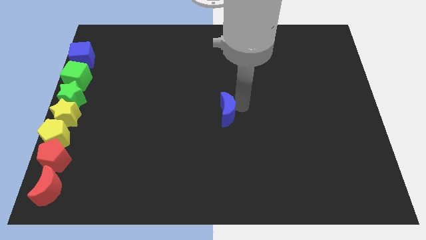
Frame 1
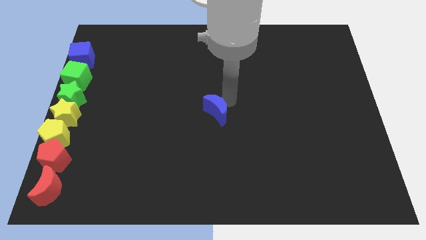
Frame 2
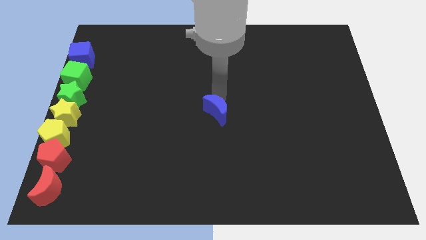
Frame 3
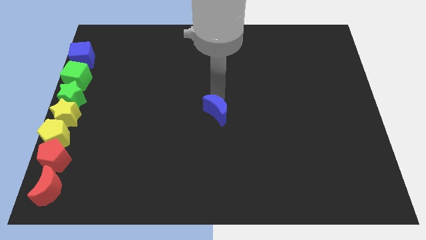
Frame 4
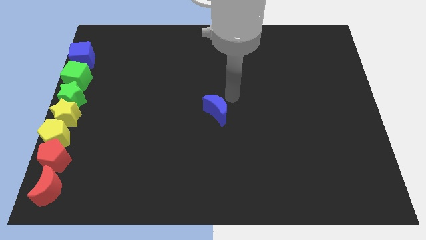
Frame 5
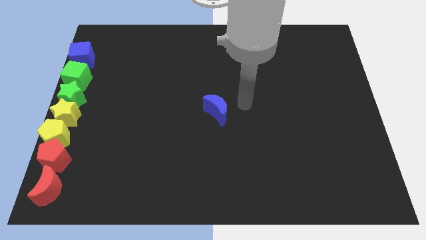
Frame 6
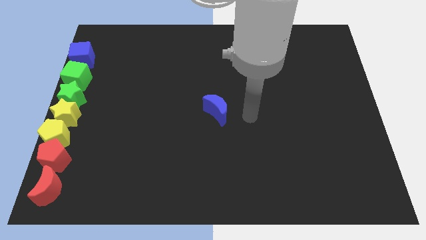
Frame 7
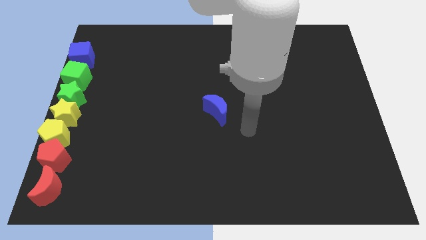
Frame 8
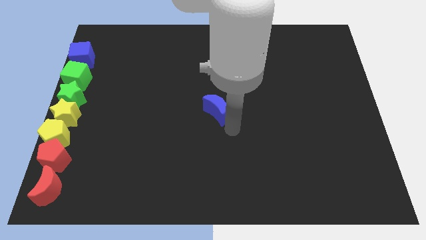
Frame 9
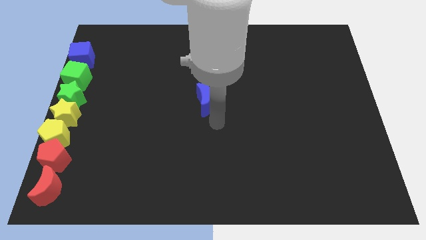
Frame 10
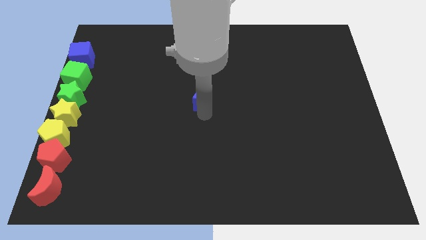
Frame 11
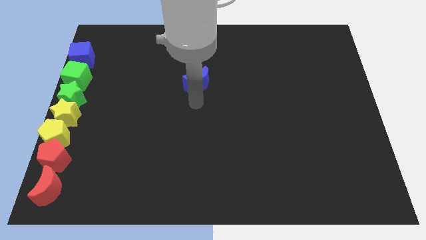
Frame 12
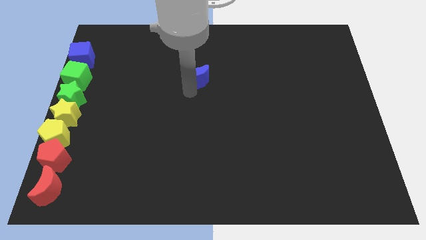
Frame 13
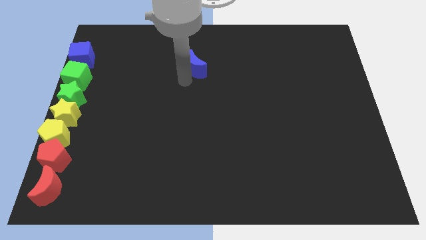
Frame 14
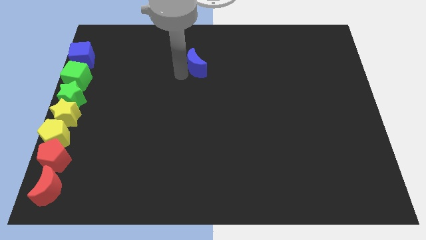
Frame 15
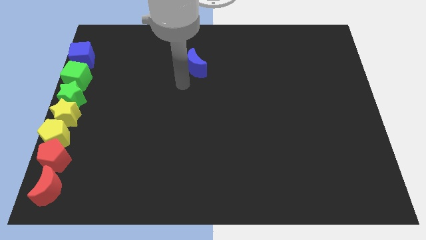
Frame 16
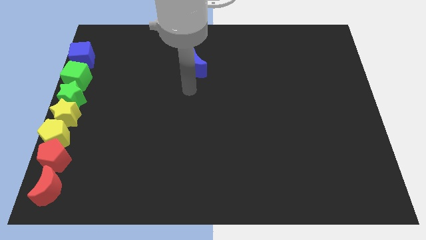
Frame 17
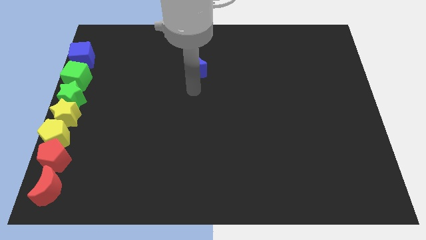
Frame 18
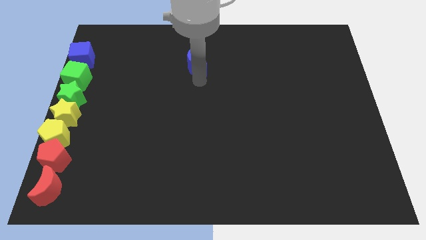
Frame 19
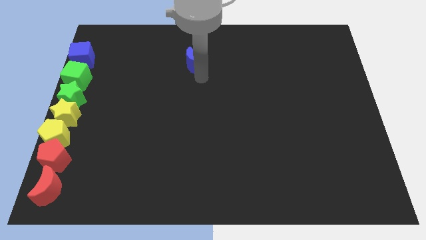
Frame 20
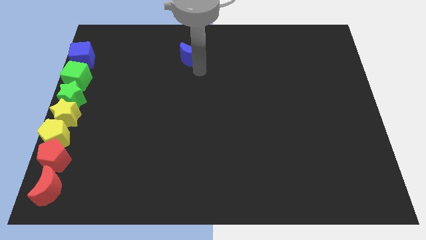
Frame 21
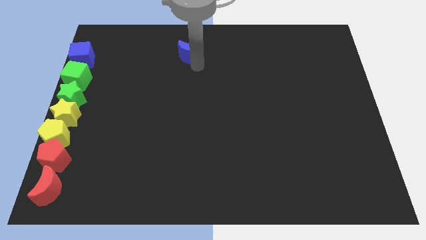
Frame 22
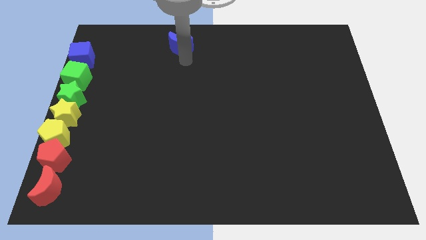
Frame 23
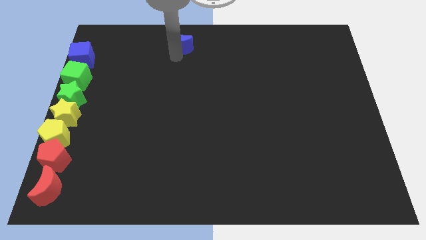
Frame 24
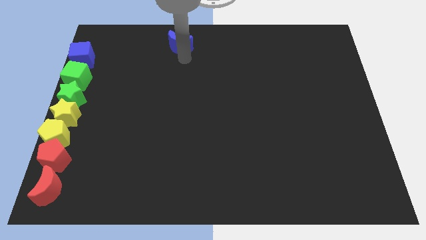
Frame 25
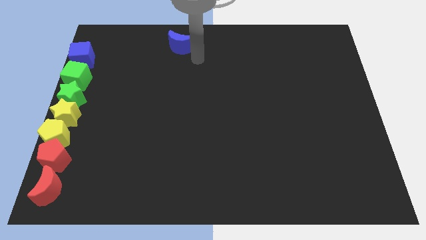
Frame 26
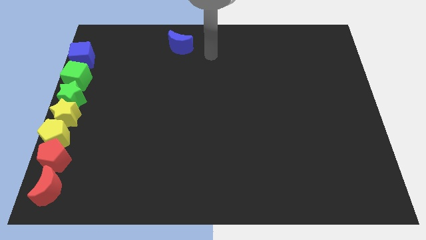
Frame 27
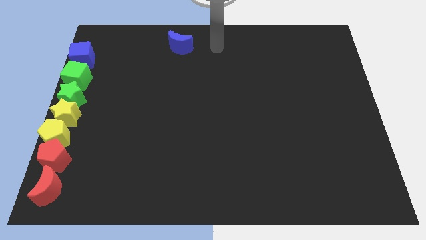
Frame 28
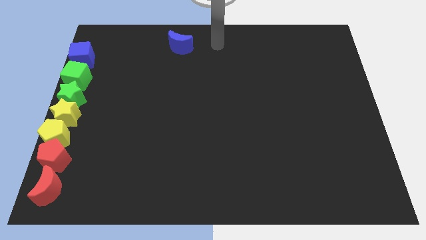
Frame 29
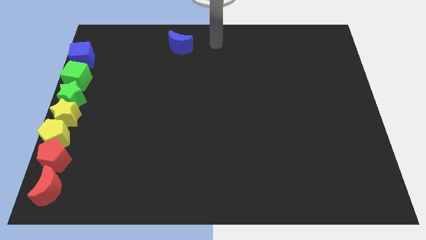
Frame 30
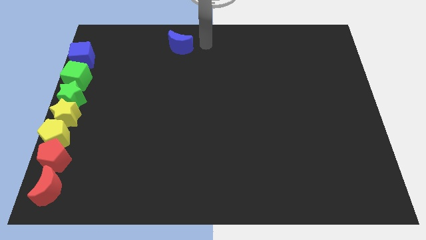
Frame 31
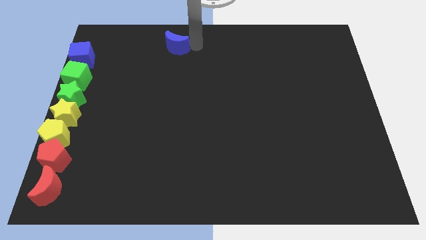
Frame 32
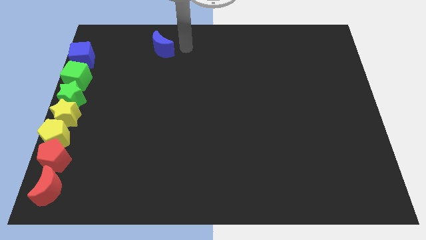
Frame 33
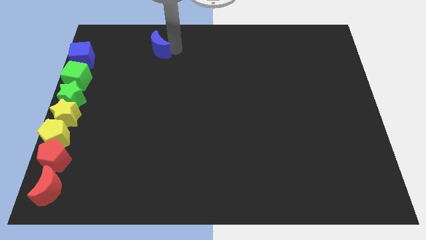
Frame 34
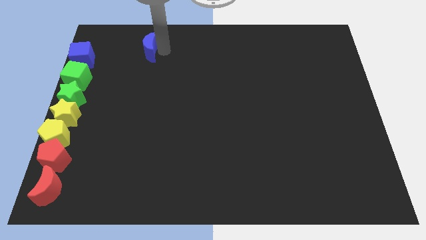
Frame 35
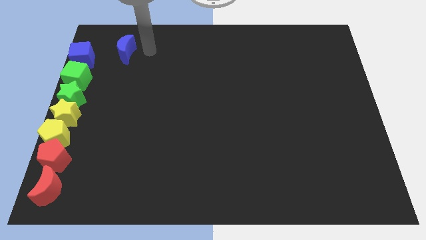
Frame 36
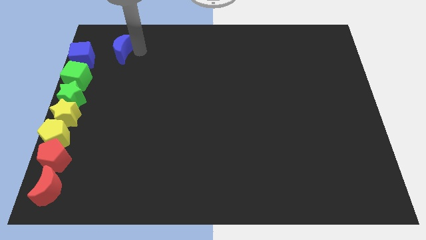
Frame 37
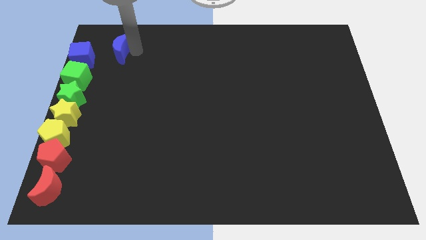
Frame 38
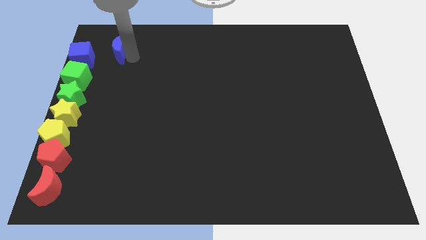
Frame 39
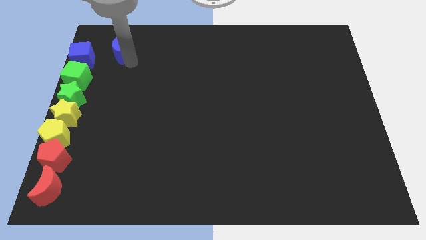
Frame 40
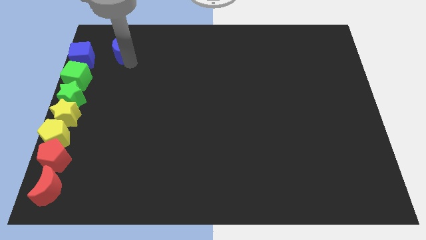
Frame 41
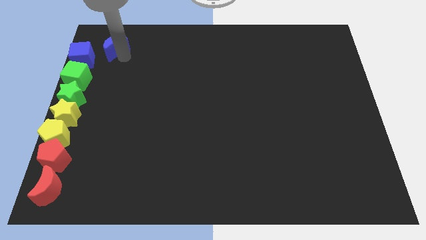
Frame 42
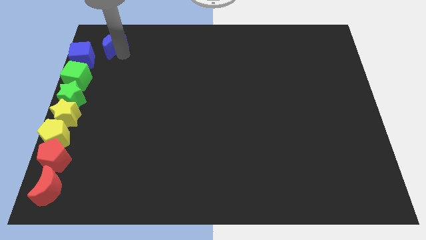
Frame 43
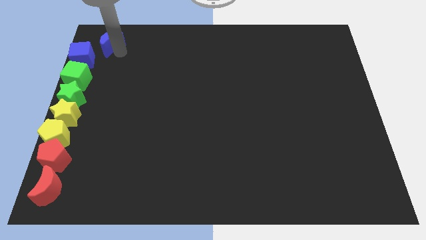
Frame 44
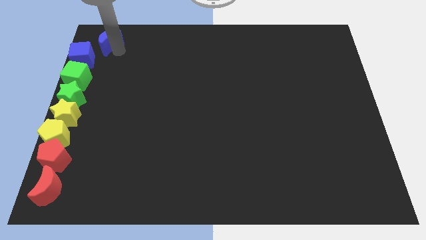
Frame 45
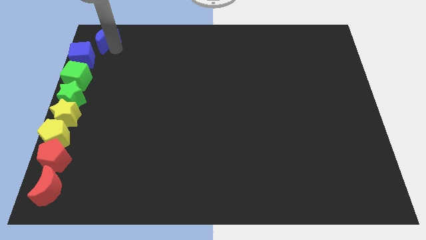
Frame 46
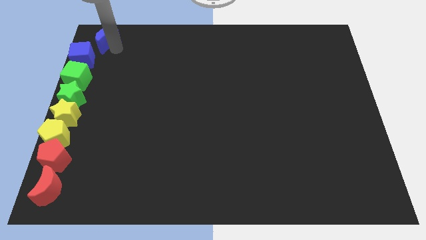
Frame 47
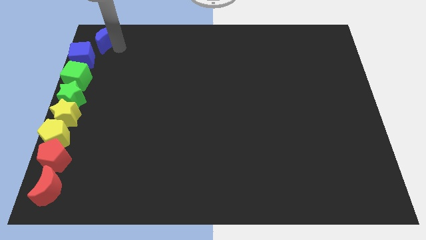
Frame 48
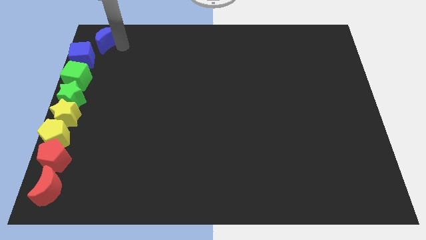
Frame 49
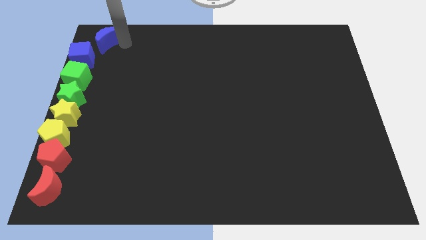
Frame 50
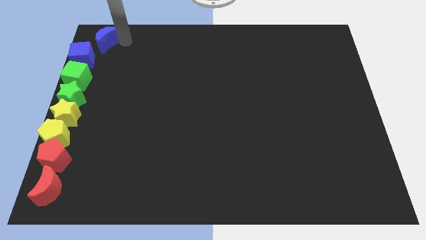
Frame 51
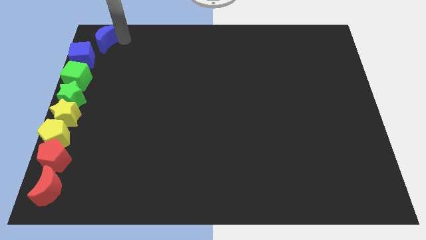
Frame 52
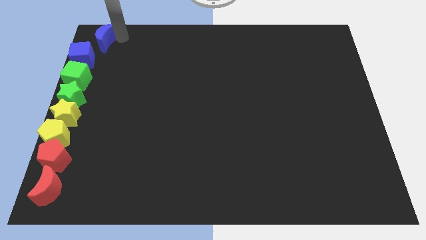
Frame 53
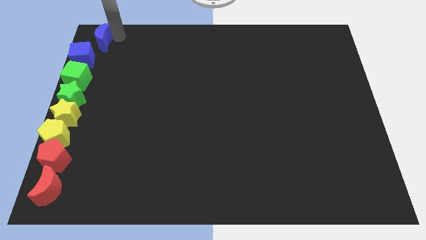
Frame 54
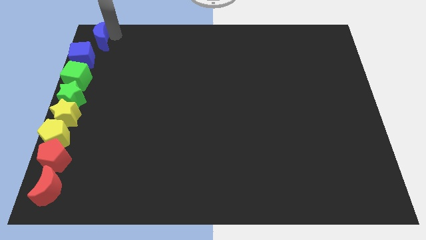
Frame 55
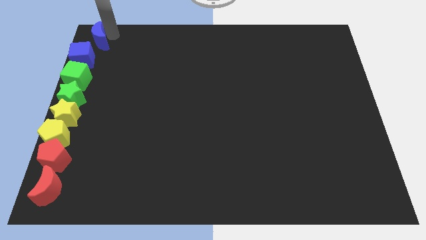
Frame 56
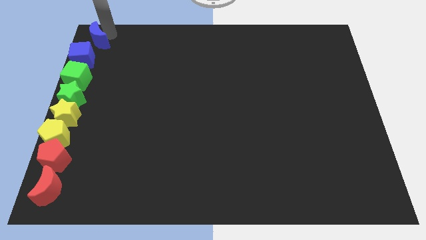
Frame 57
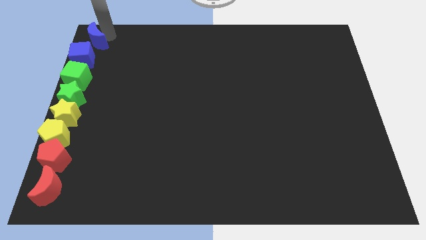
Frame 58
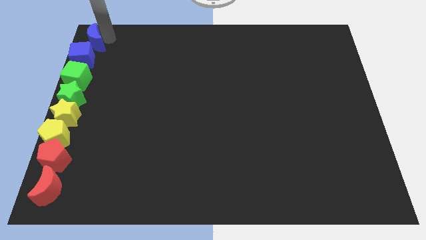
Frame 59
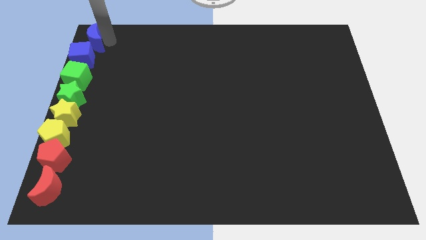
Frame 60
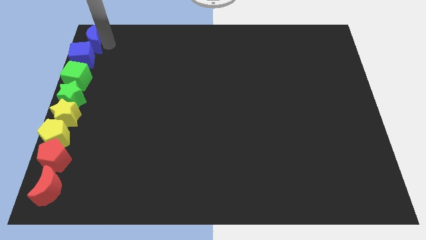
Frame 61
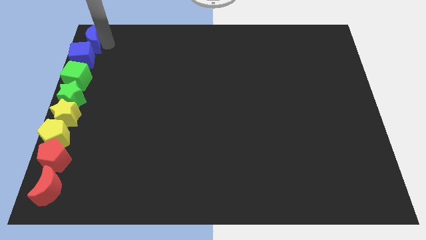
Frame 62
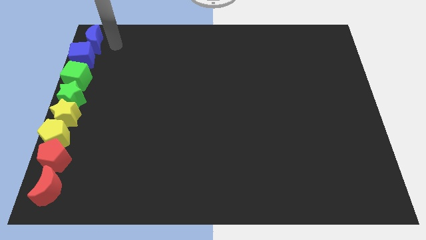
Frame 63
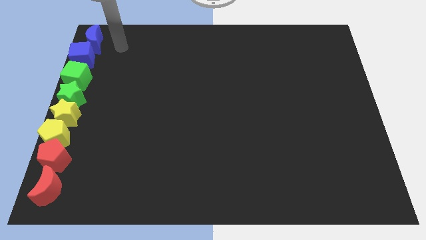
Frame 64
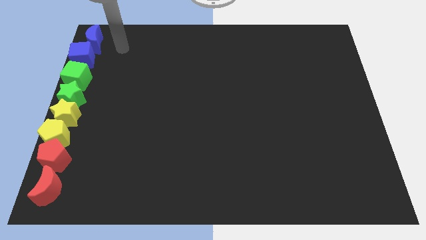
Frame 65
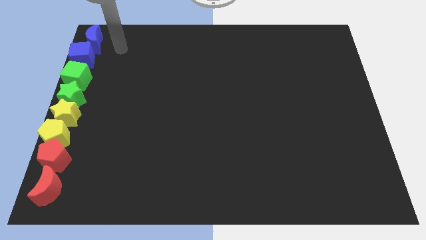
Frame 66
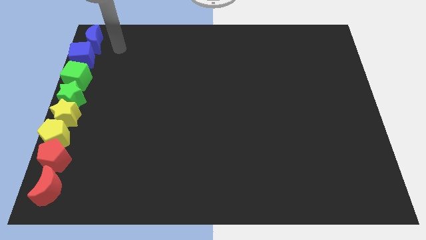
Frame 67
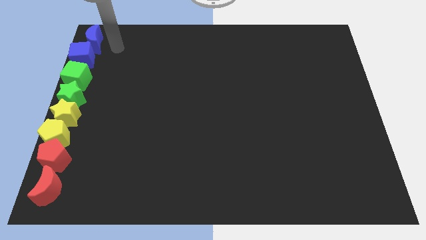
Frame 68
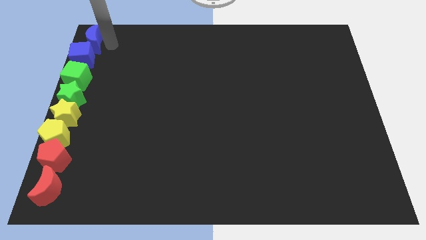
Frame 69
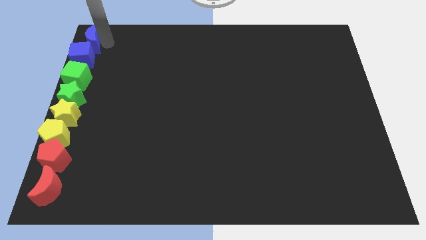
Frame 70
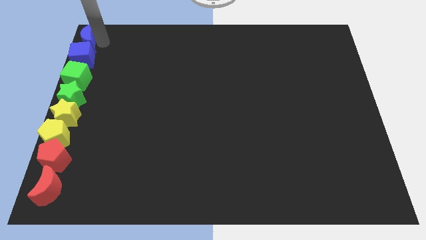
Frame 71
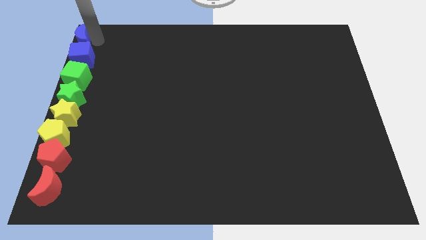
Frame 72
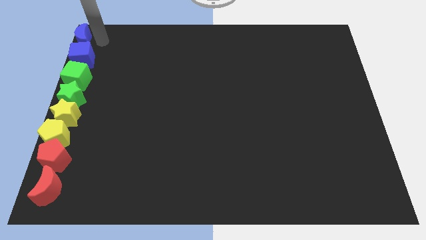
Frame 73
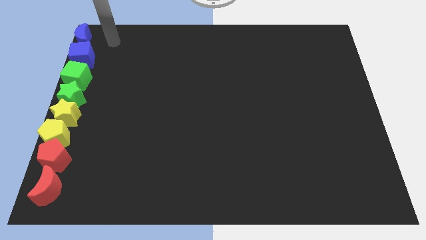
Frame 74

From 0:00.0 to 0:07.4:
push blue crescent to the top left corner of the board

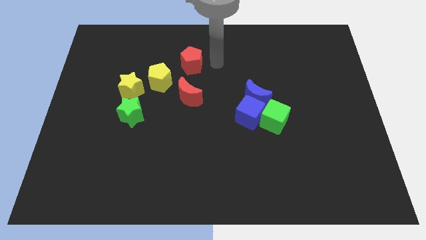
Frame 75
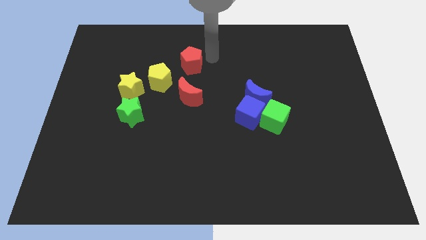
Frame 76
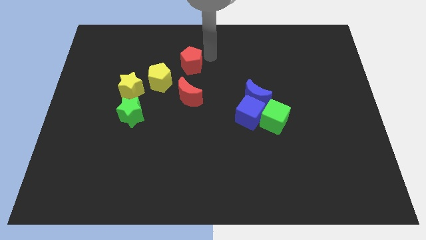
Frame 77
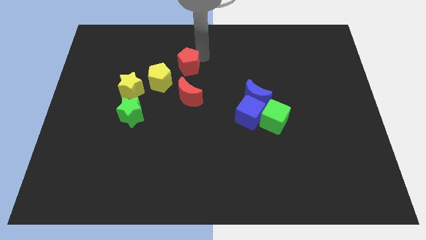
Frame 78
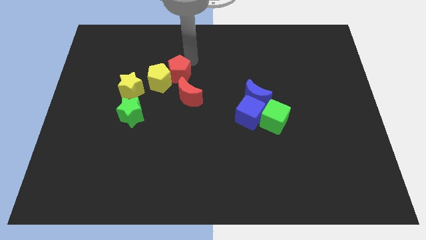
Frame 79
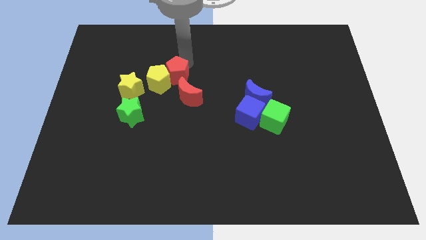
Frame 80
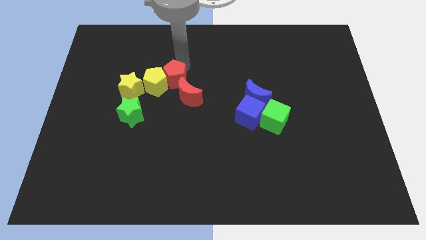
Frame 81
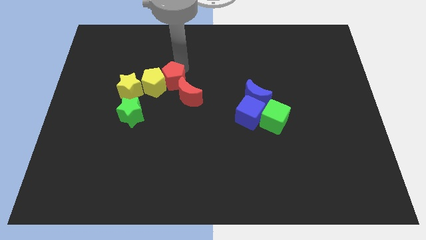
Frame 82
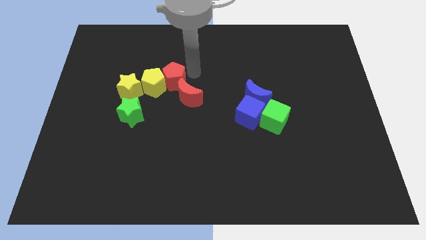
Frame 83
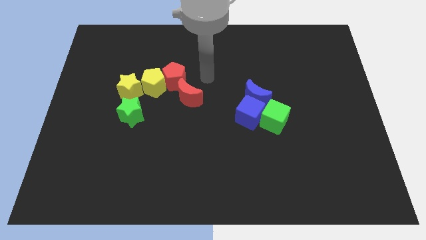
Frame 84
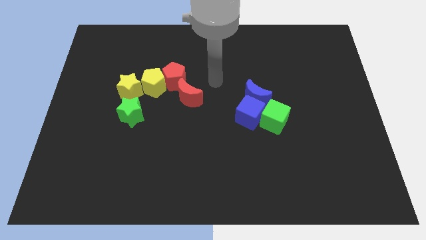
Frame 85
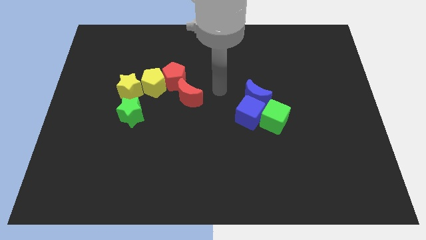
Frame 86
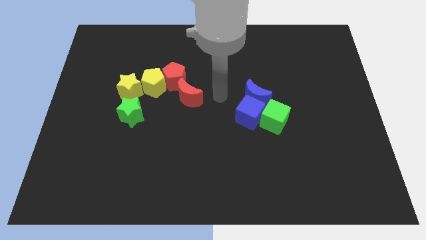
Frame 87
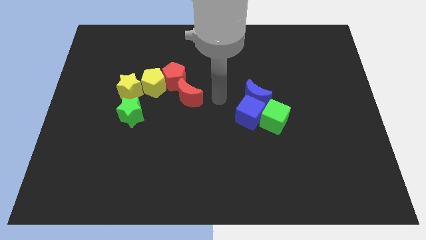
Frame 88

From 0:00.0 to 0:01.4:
move the red pentagon into the yellow pentagon
